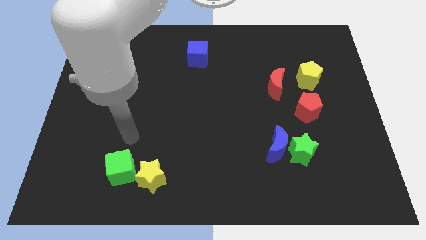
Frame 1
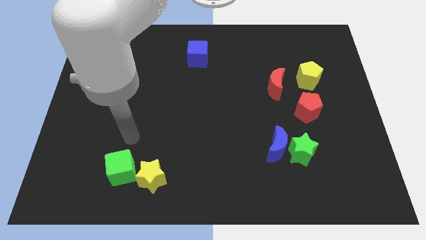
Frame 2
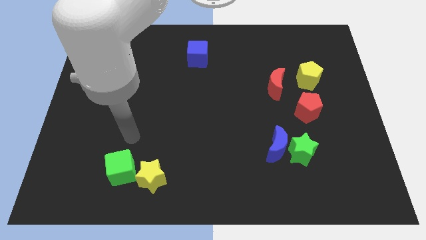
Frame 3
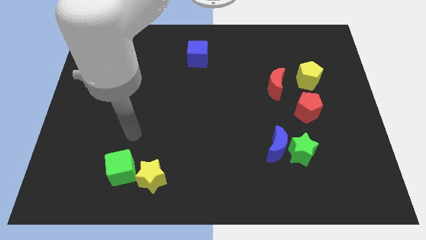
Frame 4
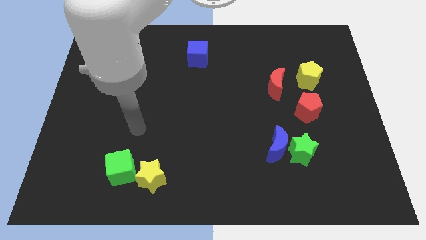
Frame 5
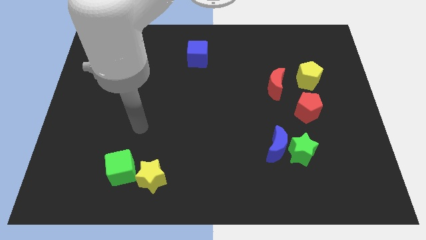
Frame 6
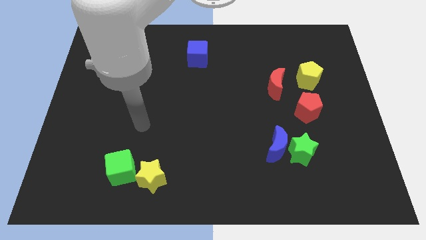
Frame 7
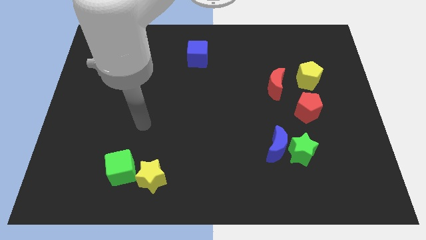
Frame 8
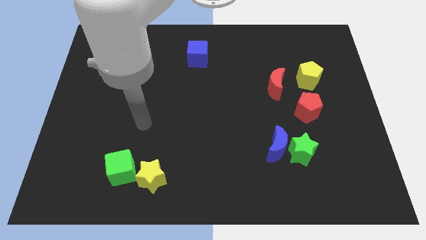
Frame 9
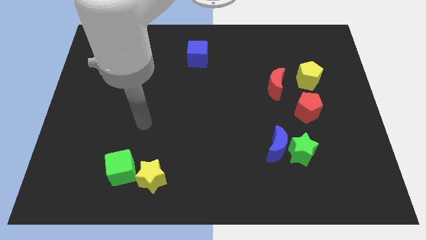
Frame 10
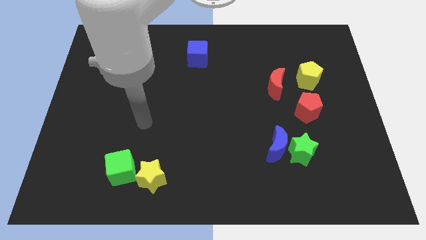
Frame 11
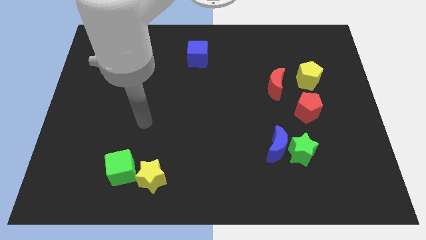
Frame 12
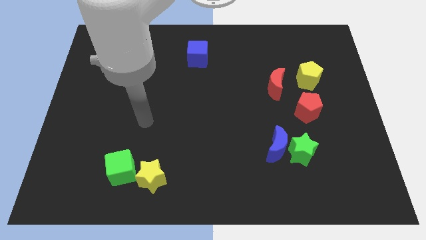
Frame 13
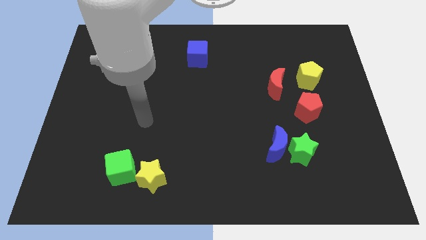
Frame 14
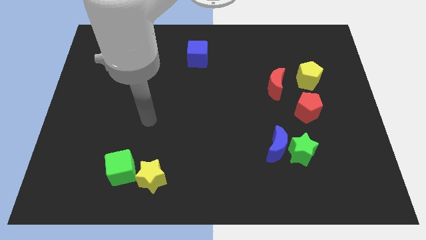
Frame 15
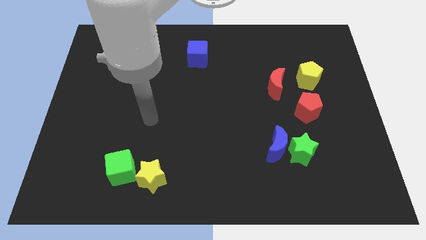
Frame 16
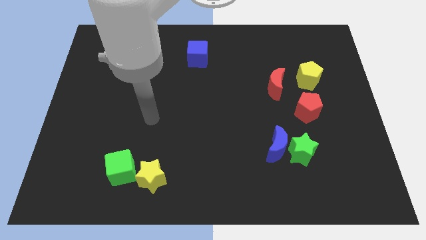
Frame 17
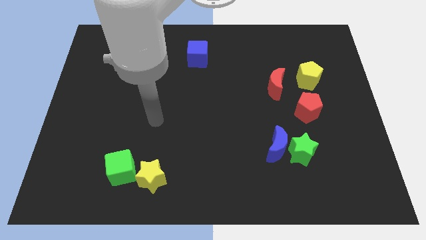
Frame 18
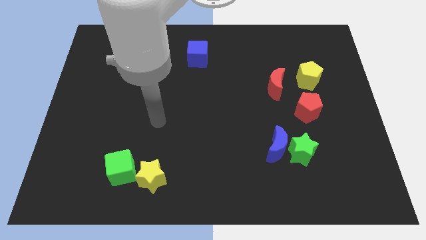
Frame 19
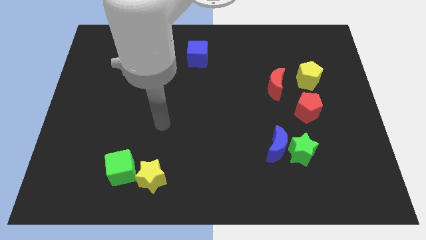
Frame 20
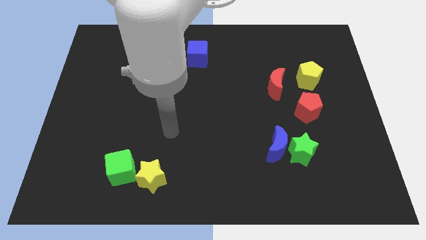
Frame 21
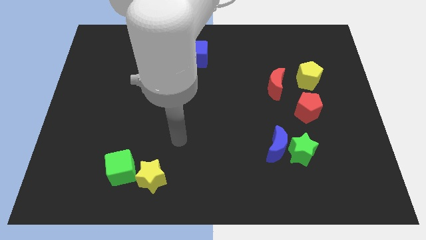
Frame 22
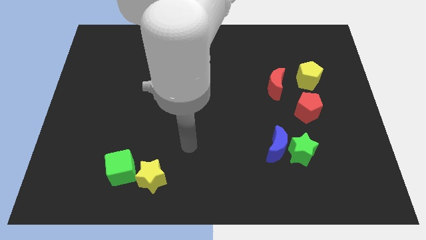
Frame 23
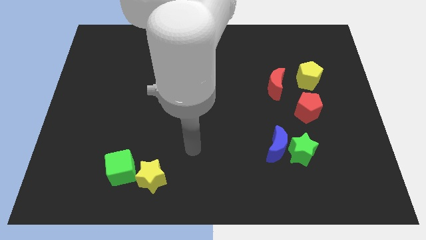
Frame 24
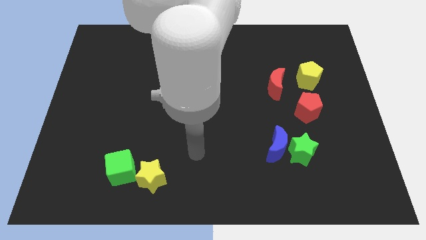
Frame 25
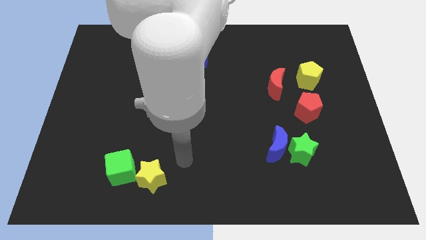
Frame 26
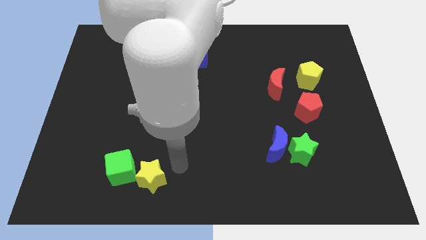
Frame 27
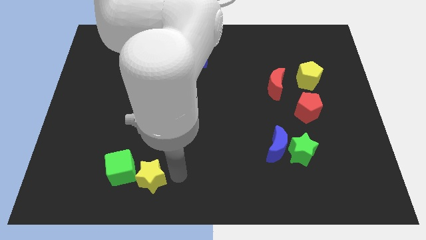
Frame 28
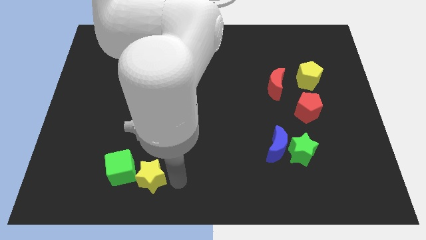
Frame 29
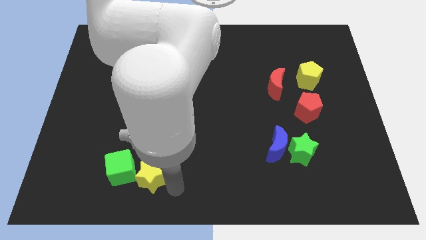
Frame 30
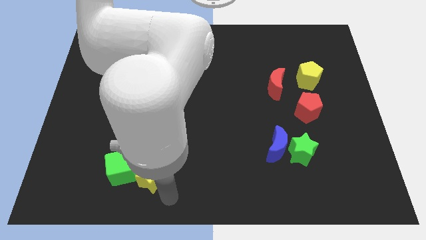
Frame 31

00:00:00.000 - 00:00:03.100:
put your hand at the bottom right side of the yellow star

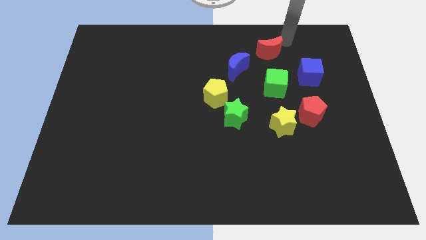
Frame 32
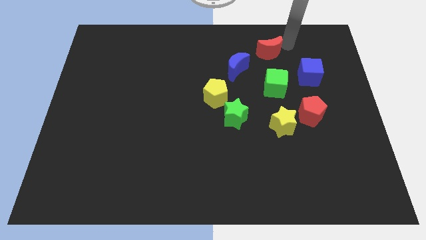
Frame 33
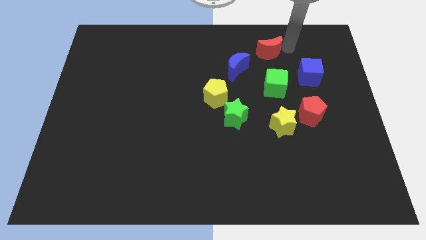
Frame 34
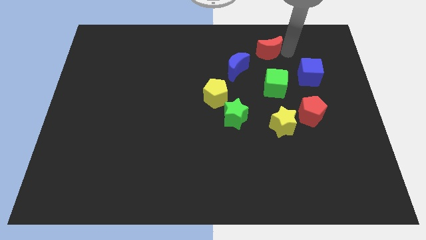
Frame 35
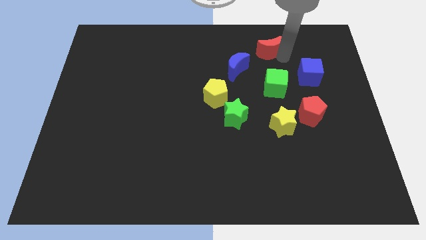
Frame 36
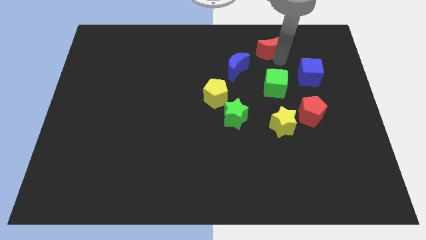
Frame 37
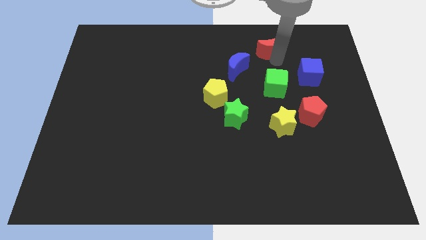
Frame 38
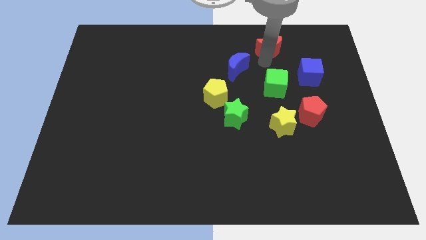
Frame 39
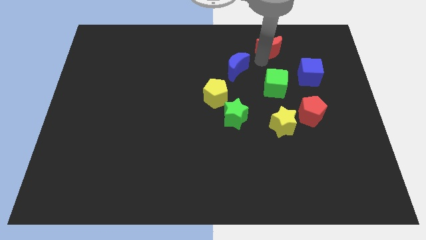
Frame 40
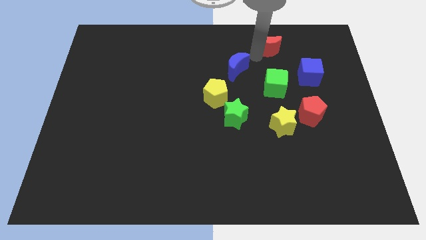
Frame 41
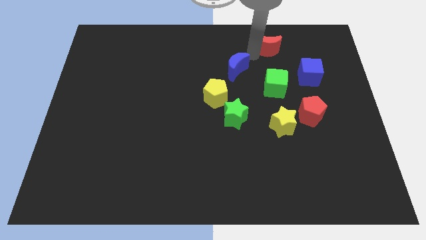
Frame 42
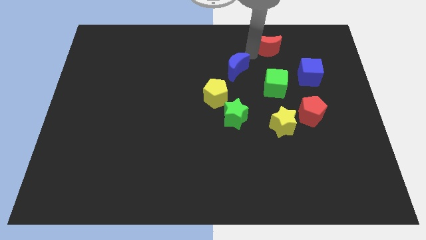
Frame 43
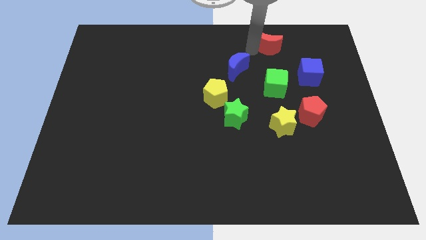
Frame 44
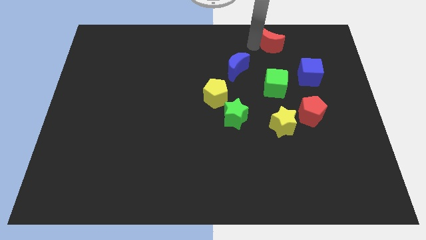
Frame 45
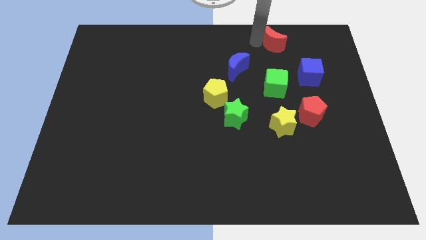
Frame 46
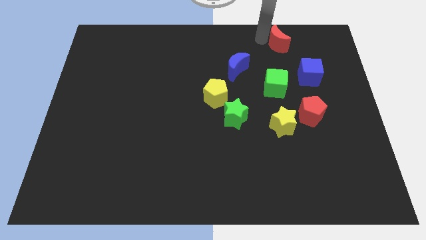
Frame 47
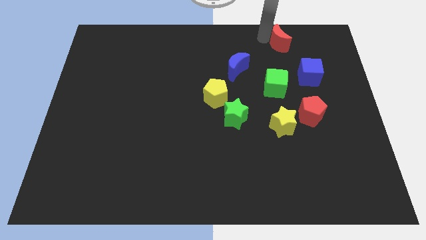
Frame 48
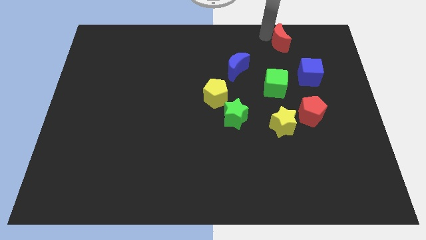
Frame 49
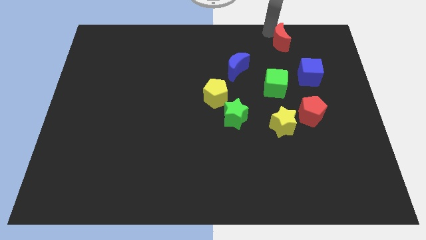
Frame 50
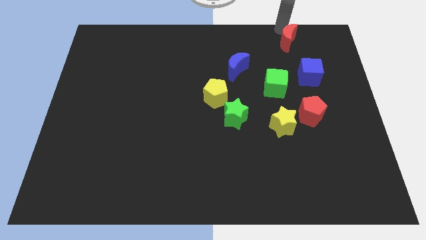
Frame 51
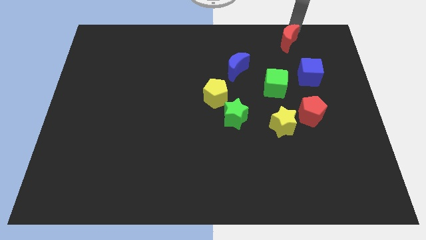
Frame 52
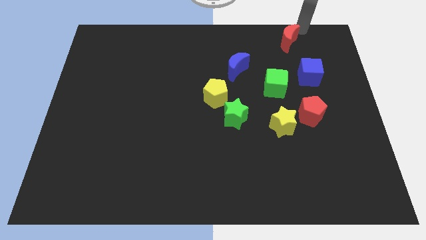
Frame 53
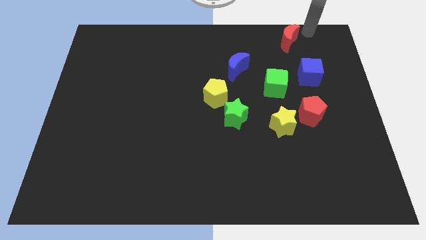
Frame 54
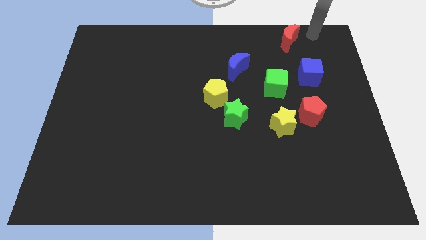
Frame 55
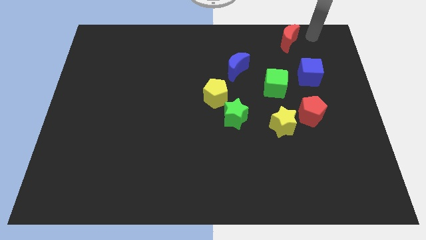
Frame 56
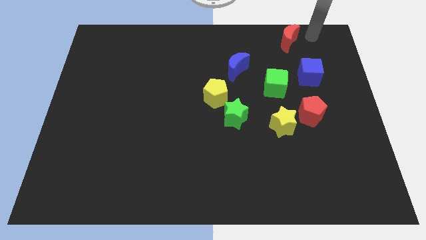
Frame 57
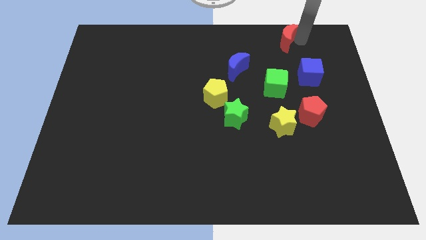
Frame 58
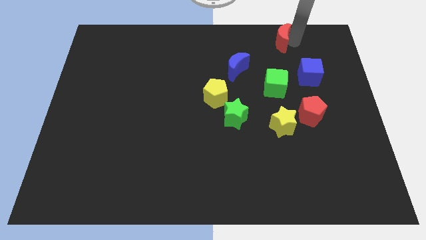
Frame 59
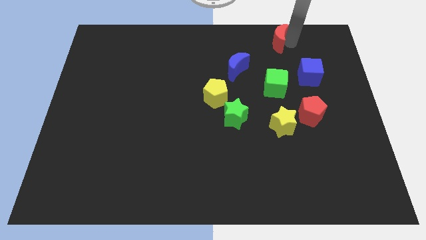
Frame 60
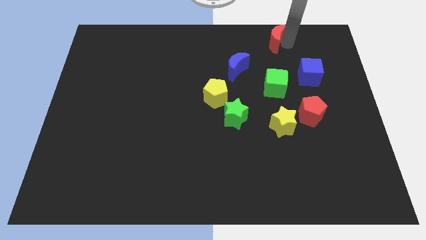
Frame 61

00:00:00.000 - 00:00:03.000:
move the red moon to the top right

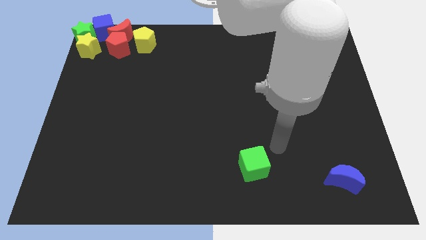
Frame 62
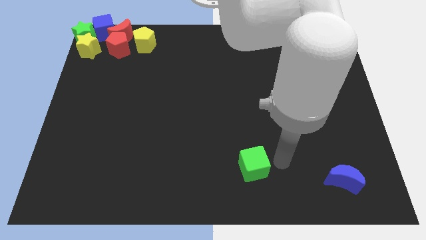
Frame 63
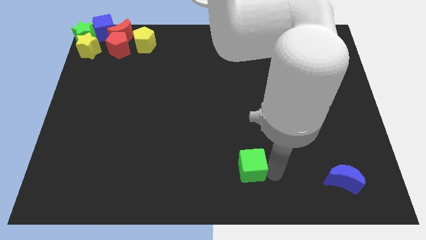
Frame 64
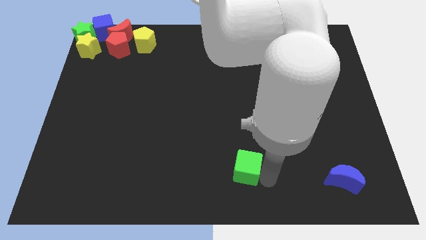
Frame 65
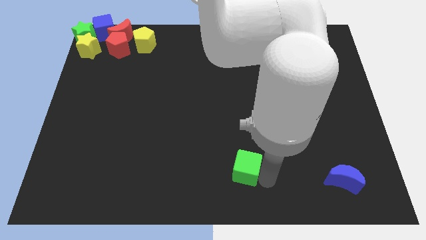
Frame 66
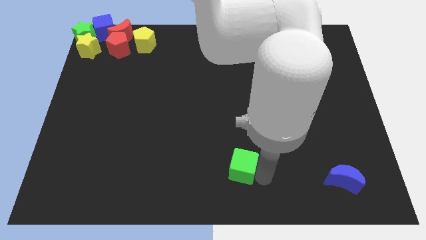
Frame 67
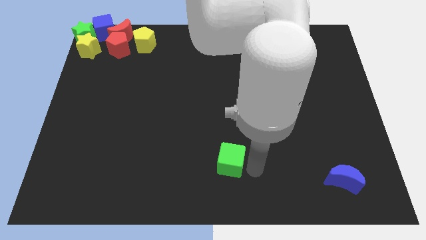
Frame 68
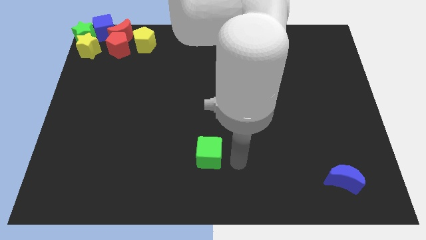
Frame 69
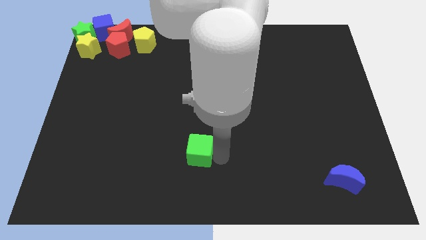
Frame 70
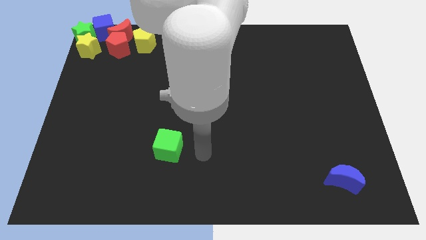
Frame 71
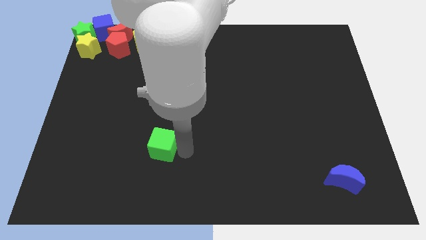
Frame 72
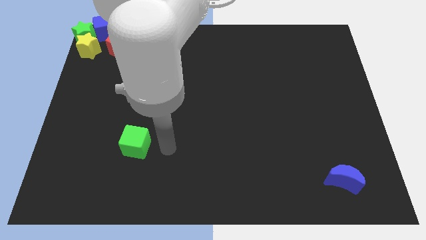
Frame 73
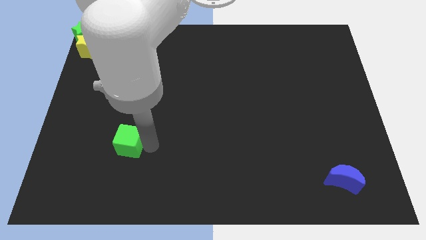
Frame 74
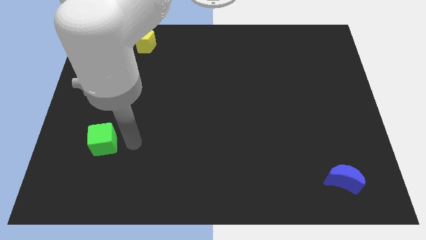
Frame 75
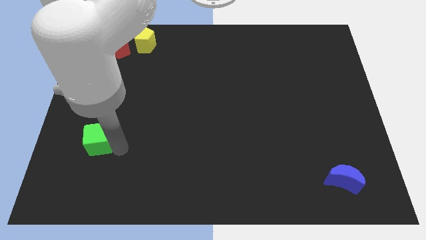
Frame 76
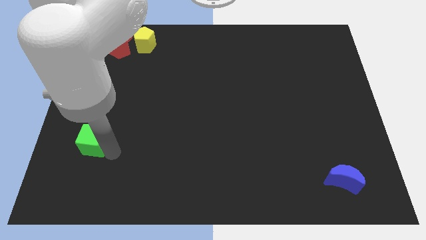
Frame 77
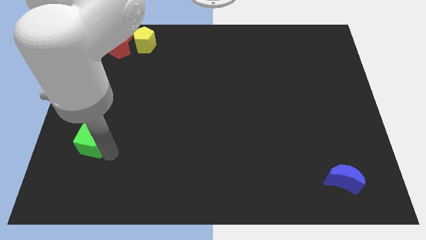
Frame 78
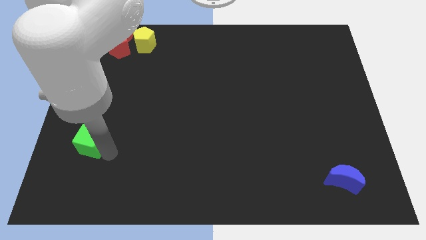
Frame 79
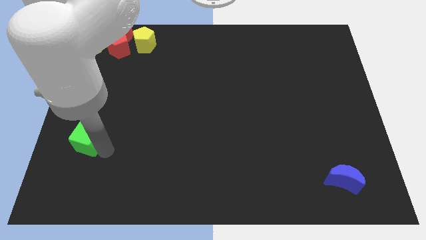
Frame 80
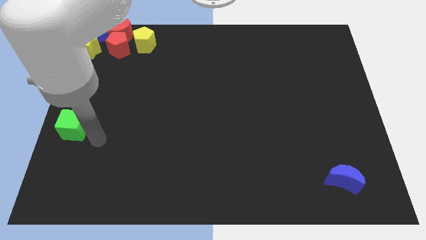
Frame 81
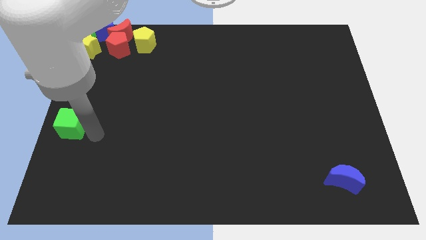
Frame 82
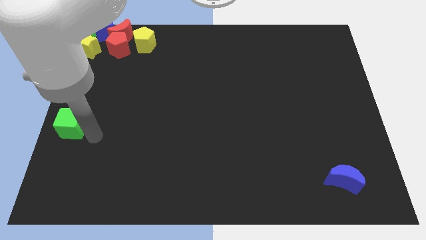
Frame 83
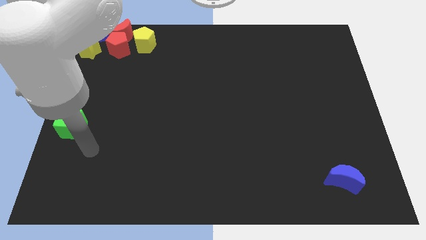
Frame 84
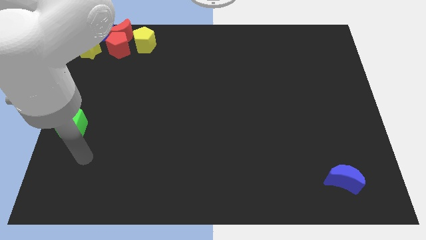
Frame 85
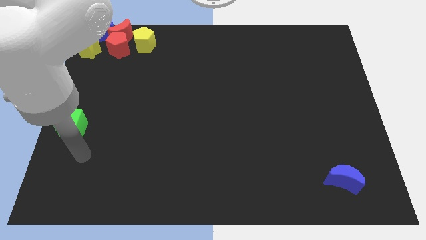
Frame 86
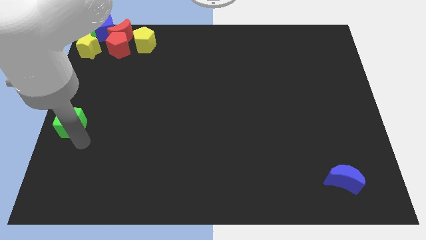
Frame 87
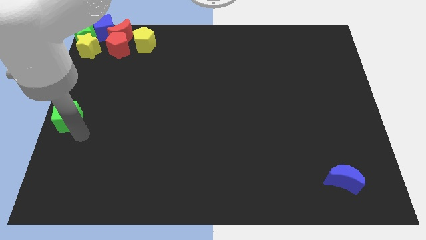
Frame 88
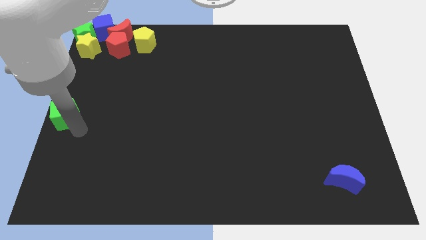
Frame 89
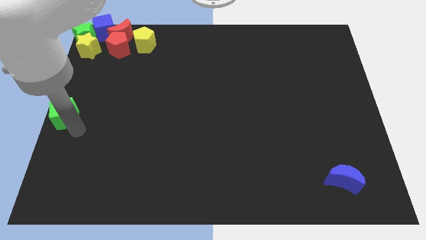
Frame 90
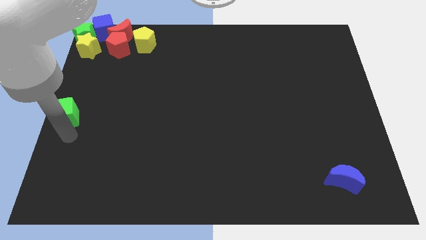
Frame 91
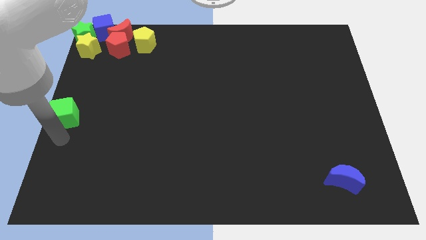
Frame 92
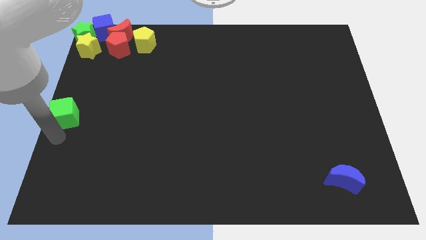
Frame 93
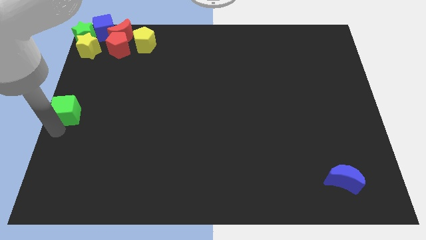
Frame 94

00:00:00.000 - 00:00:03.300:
place the green cube to the center left of the board
